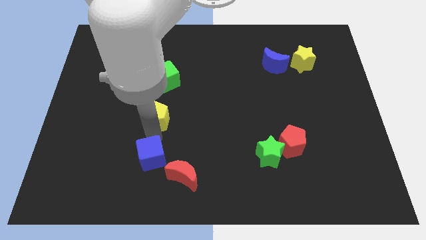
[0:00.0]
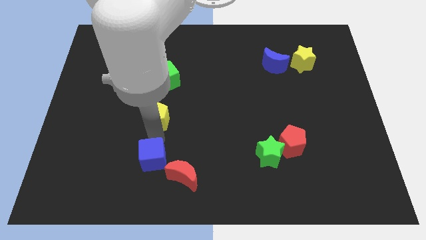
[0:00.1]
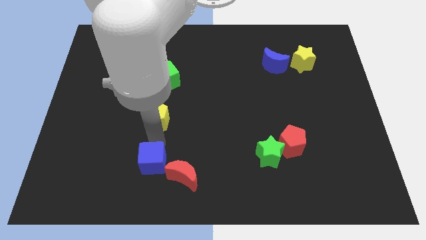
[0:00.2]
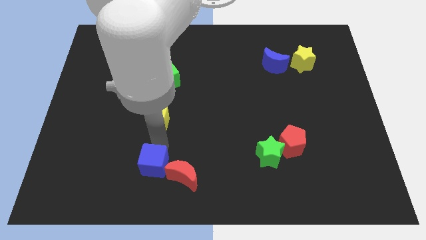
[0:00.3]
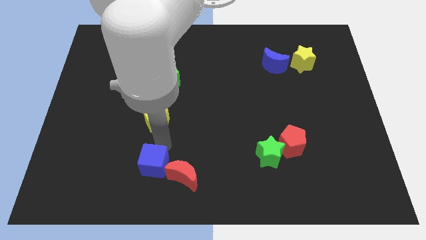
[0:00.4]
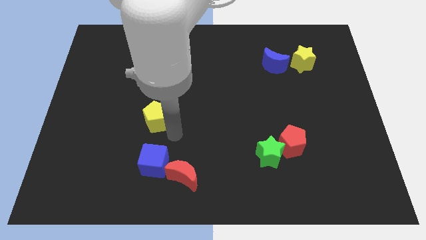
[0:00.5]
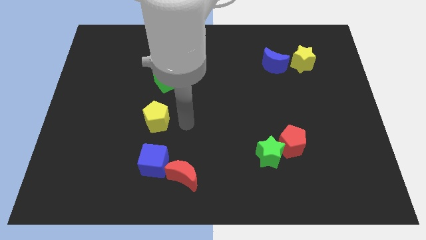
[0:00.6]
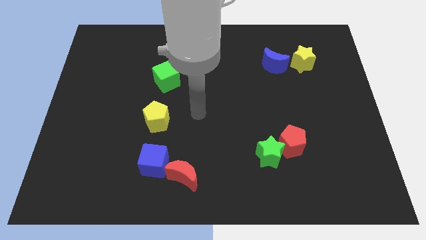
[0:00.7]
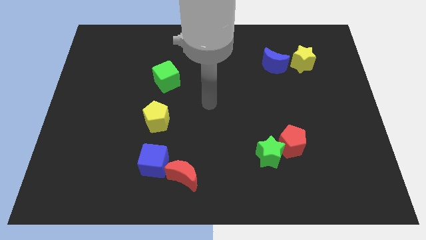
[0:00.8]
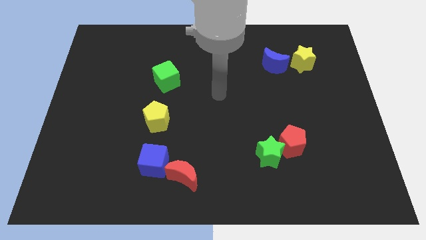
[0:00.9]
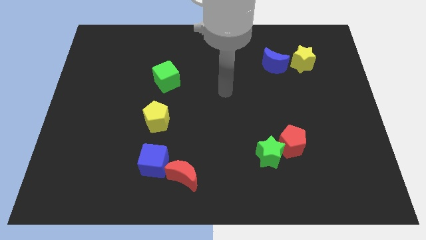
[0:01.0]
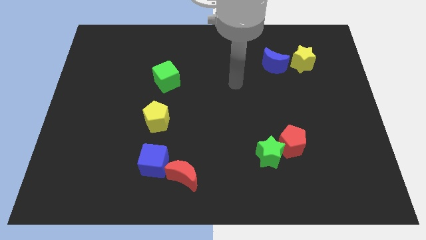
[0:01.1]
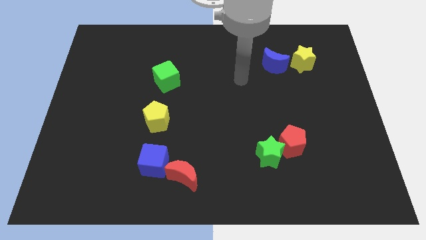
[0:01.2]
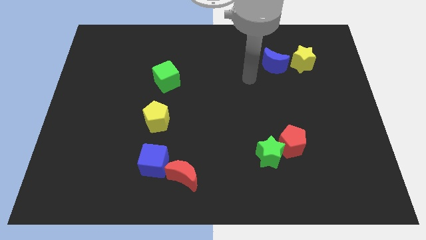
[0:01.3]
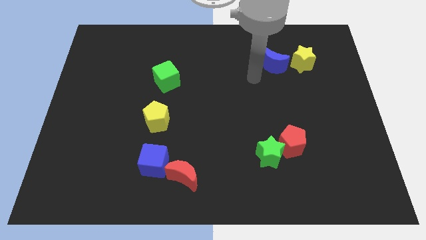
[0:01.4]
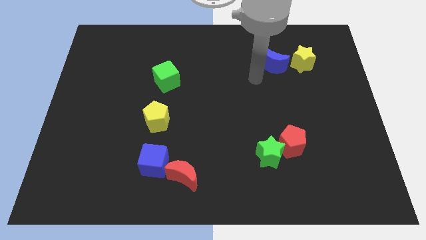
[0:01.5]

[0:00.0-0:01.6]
place the blue cube to the left side of the red moon

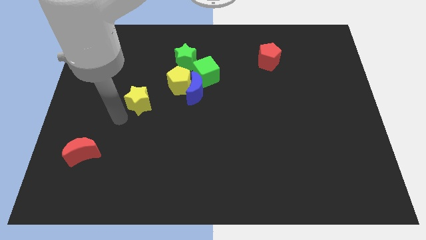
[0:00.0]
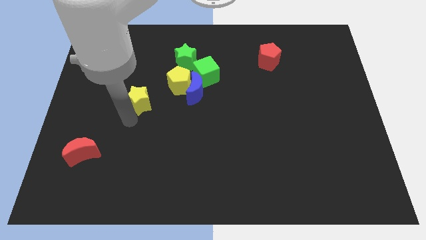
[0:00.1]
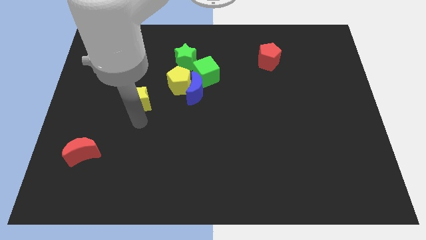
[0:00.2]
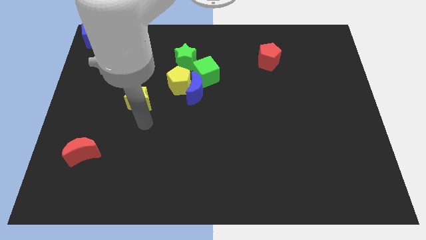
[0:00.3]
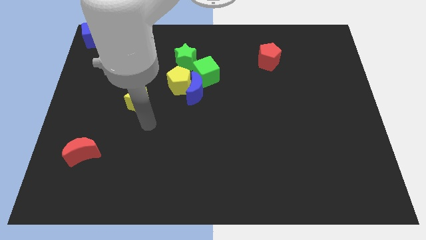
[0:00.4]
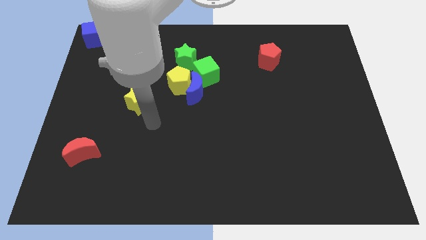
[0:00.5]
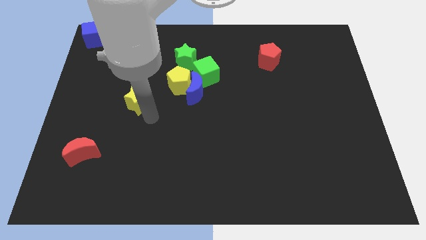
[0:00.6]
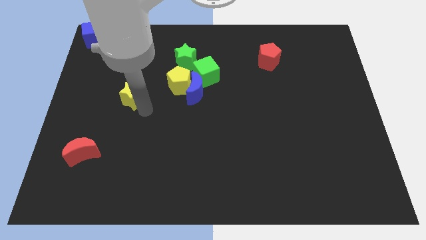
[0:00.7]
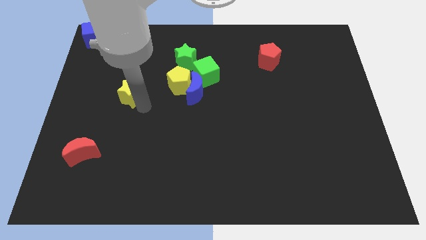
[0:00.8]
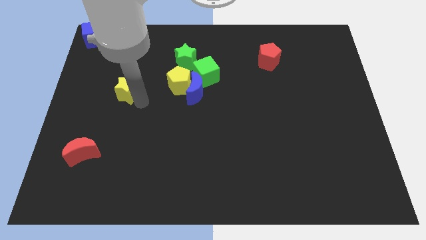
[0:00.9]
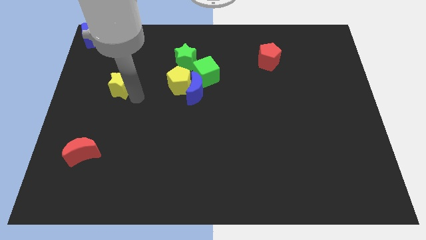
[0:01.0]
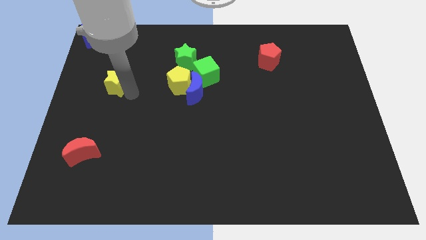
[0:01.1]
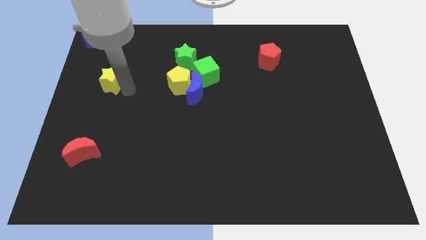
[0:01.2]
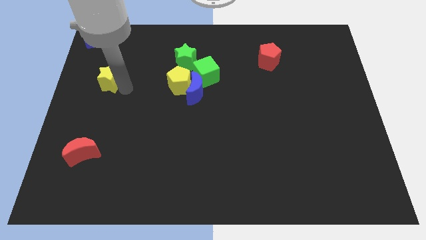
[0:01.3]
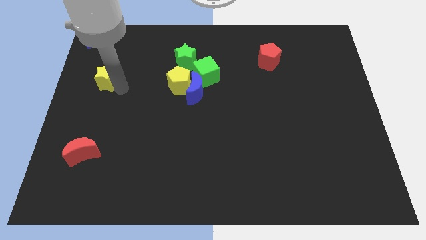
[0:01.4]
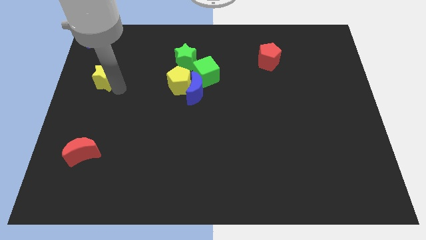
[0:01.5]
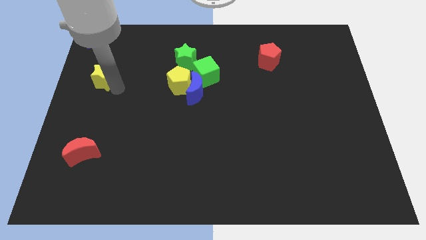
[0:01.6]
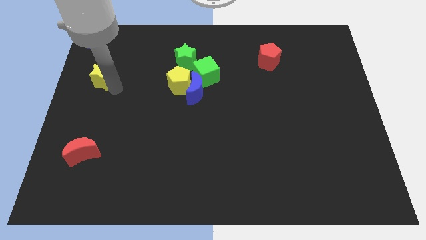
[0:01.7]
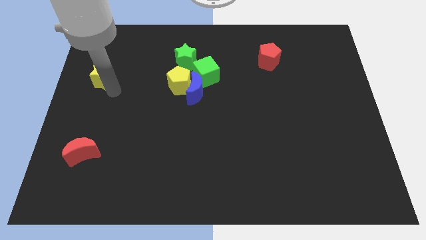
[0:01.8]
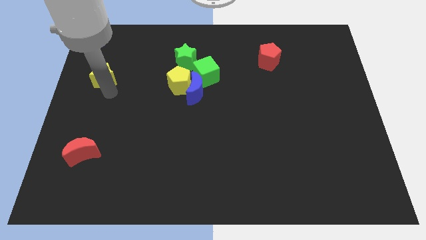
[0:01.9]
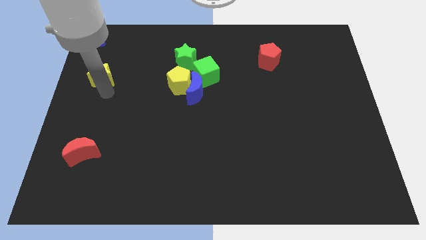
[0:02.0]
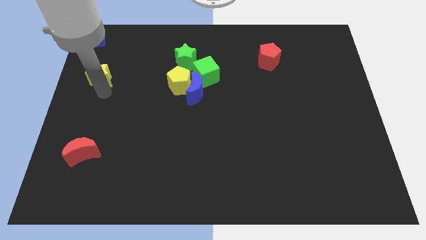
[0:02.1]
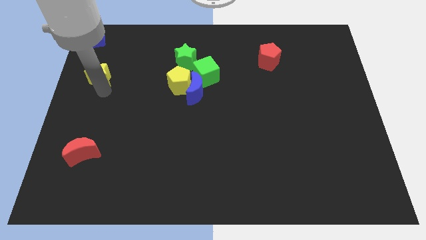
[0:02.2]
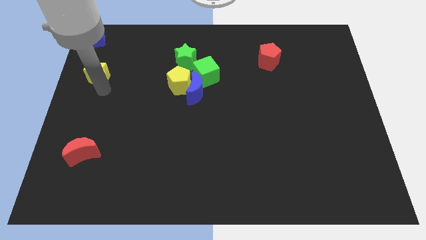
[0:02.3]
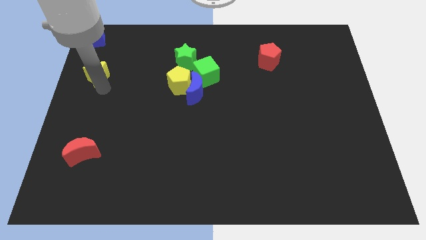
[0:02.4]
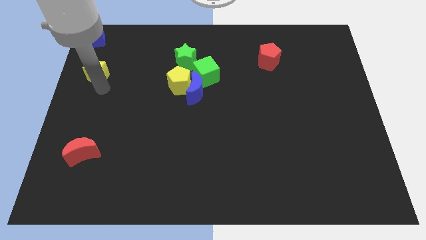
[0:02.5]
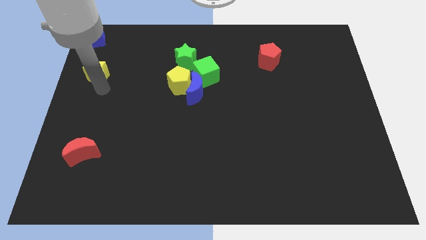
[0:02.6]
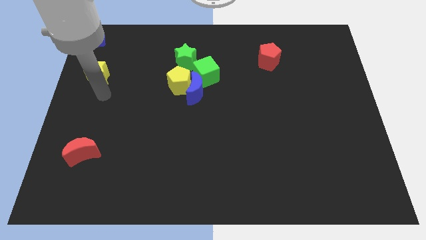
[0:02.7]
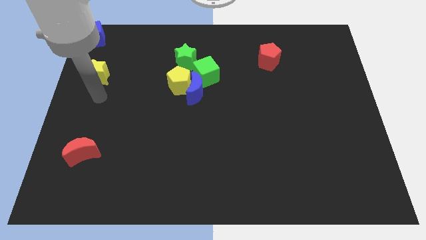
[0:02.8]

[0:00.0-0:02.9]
push yellow star in between red moon and blue cube

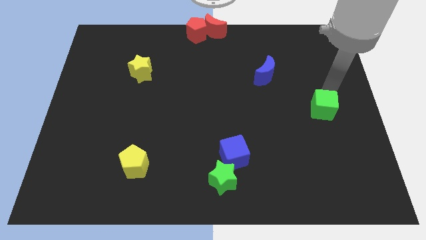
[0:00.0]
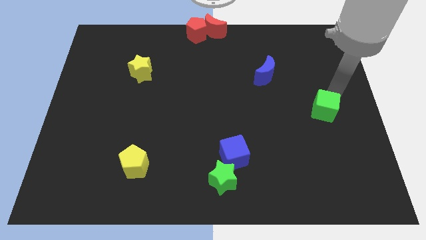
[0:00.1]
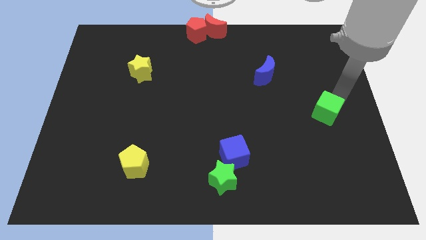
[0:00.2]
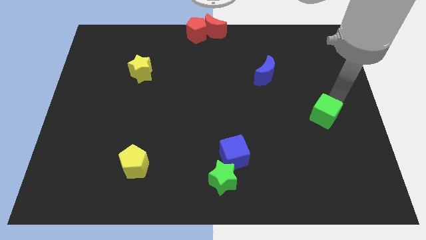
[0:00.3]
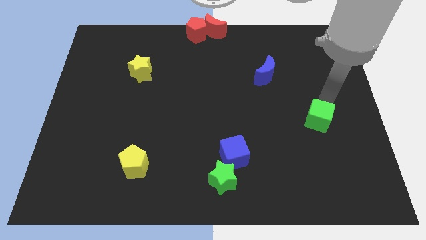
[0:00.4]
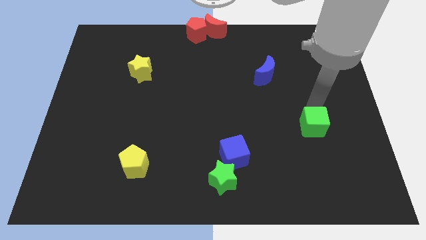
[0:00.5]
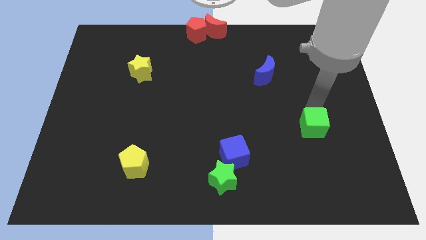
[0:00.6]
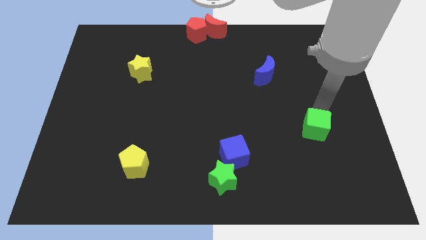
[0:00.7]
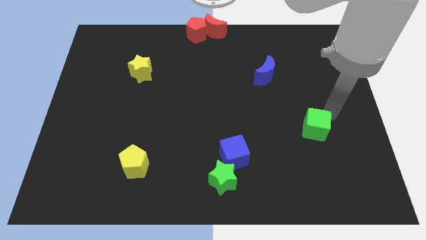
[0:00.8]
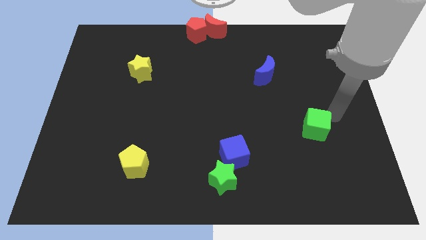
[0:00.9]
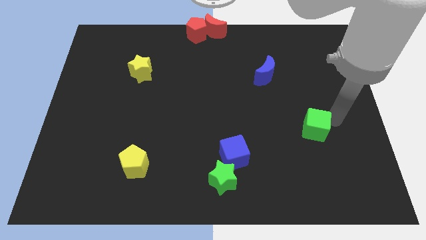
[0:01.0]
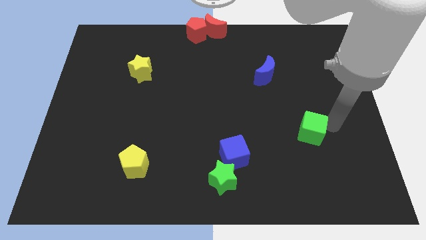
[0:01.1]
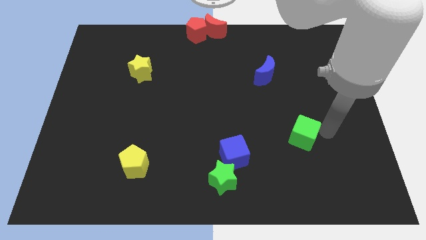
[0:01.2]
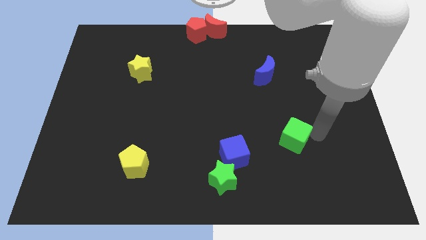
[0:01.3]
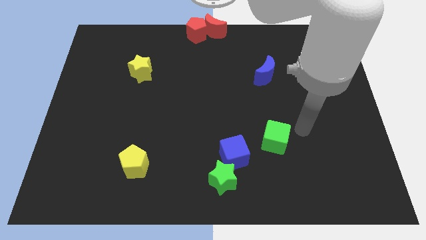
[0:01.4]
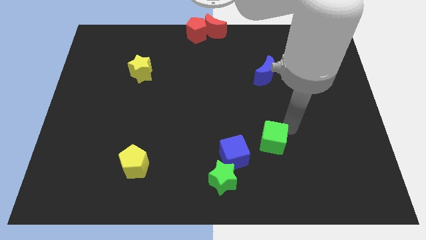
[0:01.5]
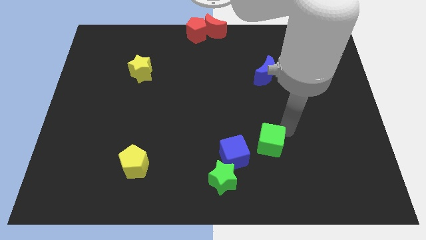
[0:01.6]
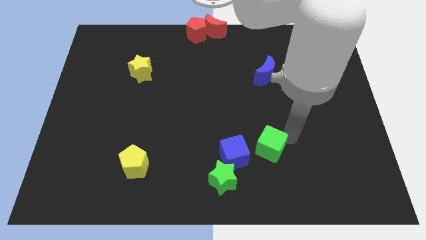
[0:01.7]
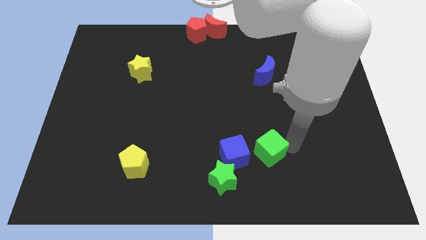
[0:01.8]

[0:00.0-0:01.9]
place the green cube right to the blue cube

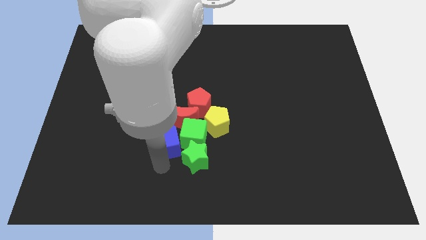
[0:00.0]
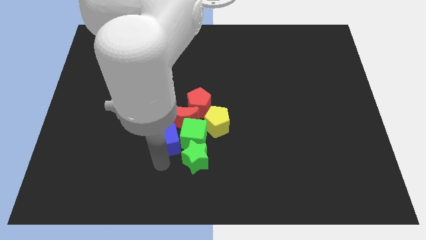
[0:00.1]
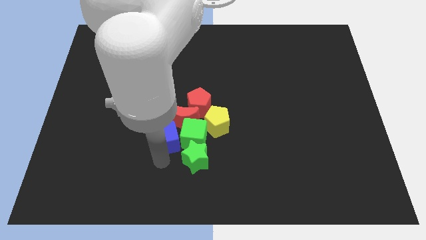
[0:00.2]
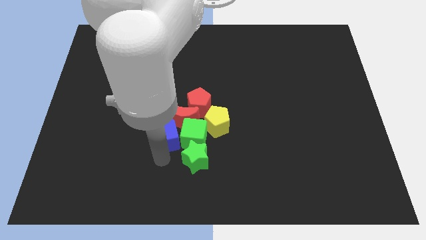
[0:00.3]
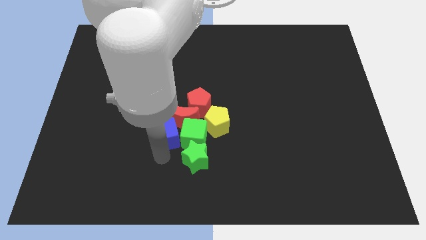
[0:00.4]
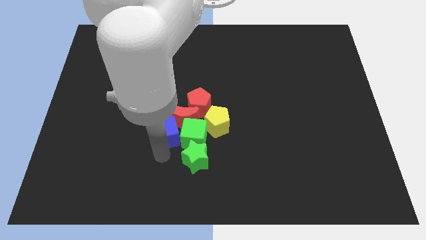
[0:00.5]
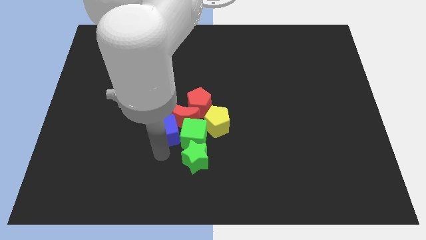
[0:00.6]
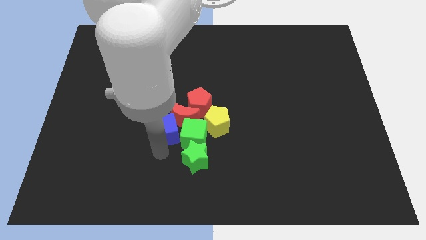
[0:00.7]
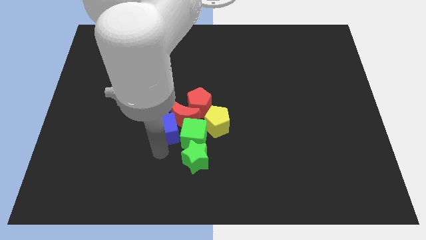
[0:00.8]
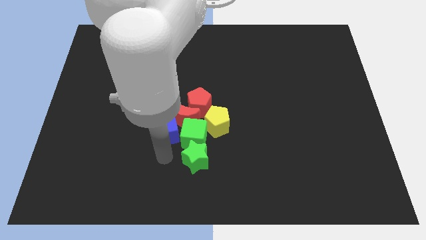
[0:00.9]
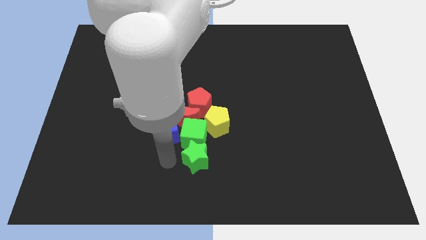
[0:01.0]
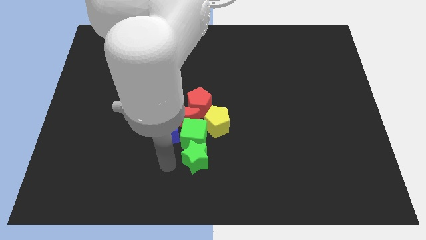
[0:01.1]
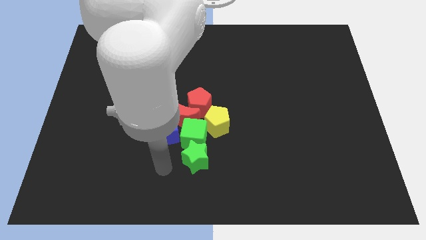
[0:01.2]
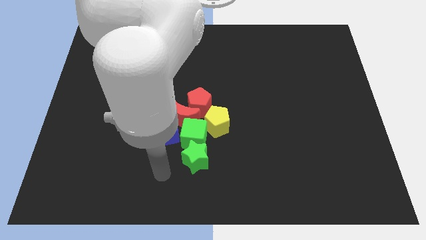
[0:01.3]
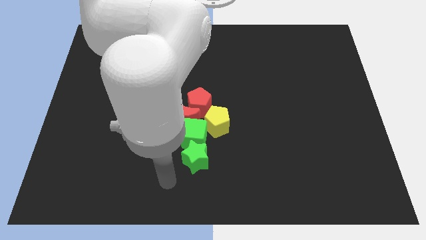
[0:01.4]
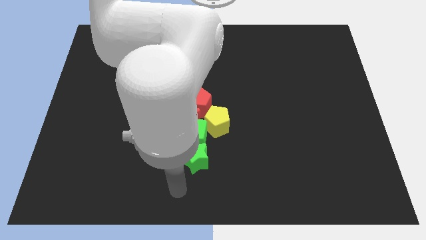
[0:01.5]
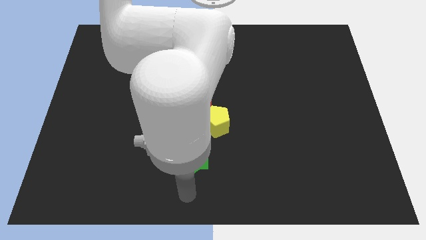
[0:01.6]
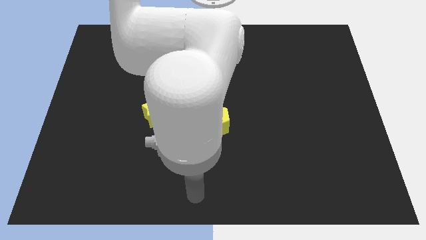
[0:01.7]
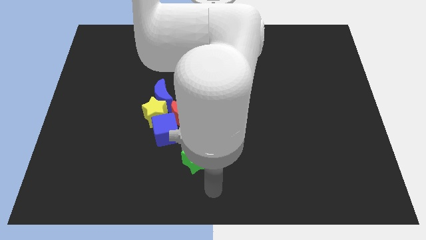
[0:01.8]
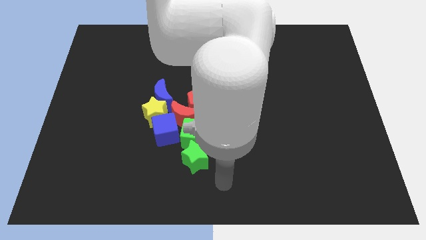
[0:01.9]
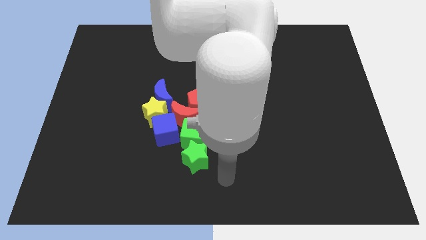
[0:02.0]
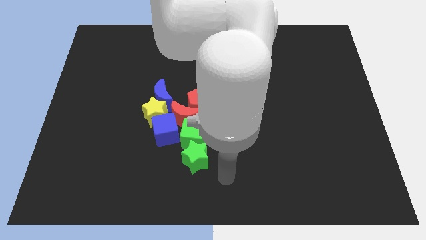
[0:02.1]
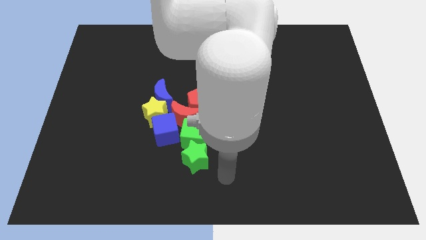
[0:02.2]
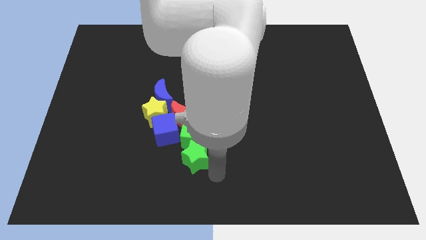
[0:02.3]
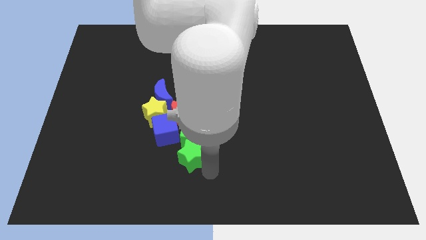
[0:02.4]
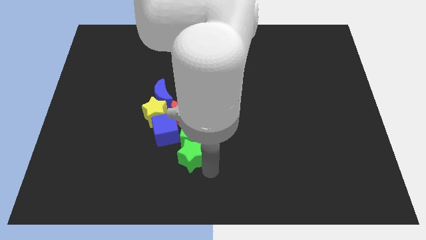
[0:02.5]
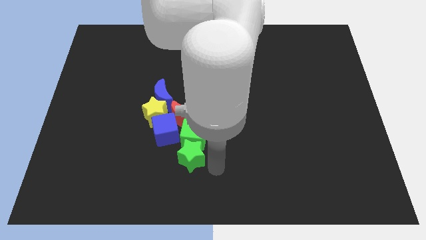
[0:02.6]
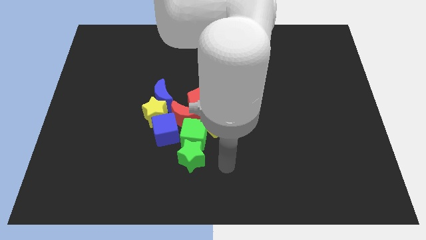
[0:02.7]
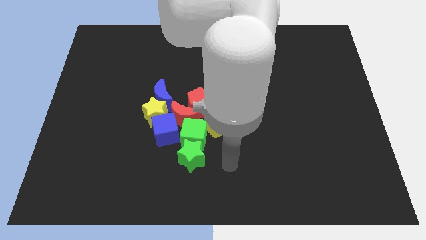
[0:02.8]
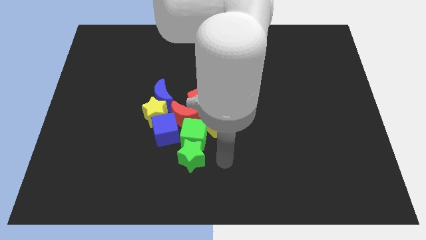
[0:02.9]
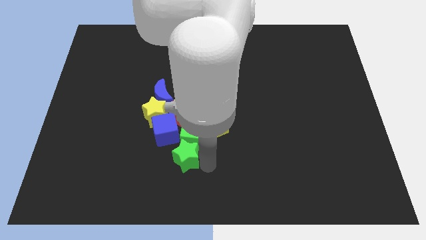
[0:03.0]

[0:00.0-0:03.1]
place your arm in the right side of the green star
